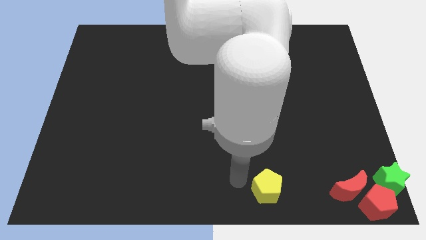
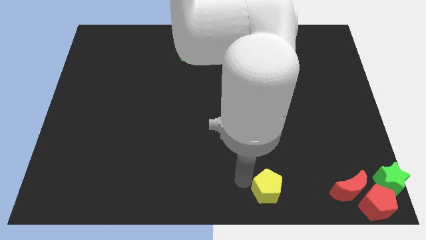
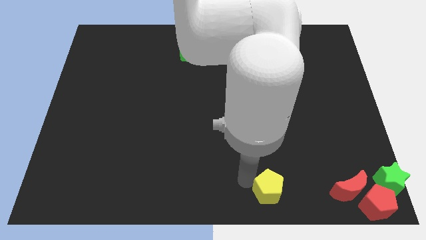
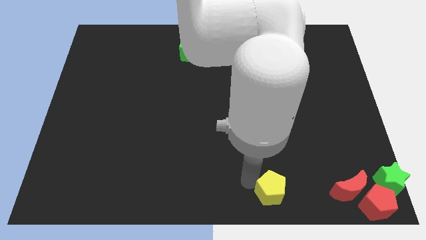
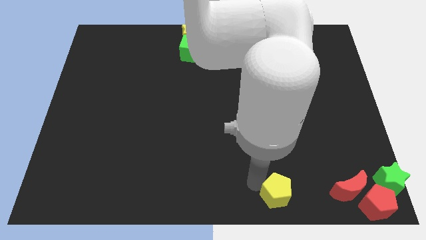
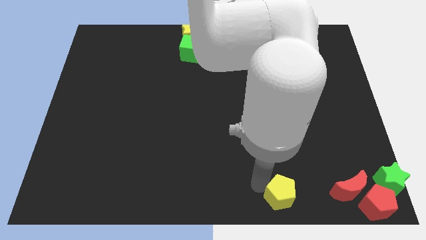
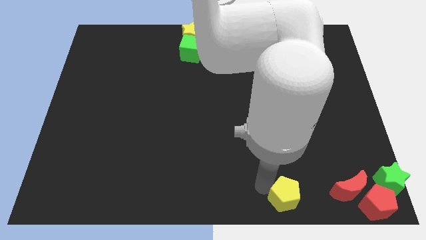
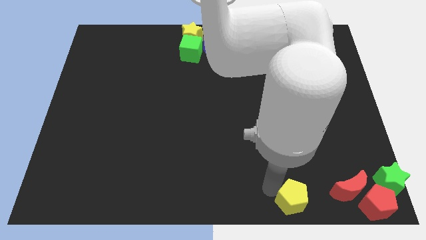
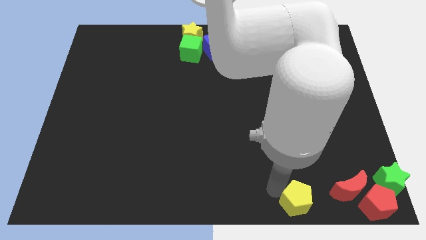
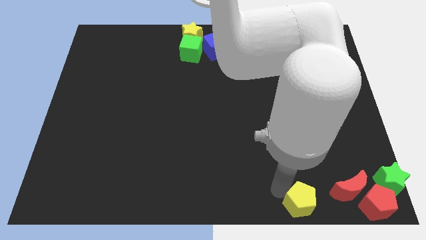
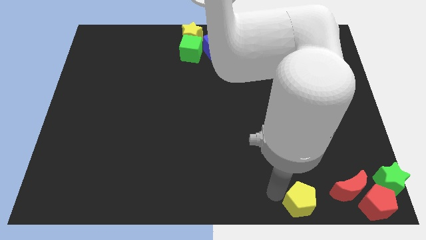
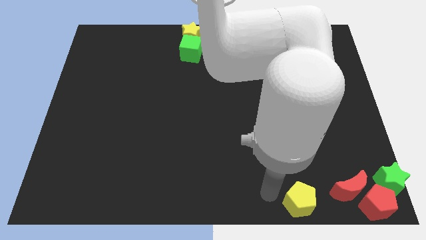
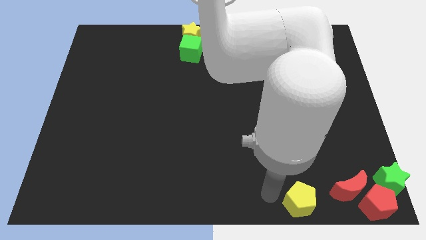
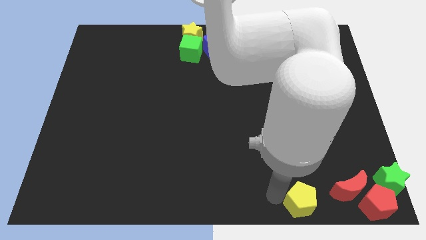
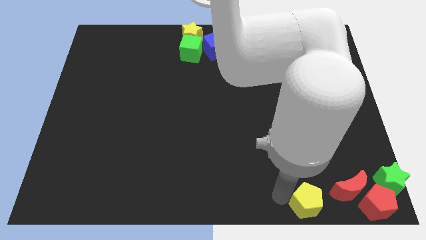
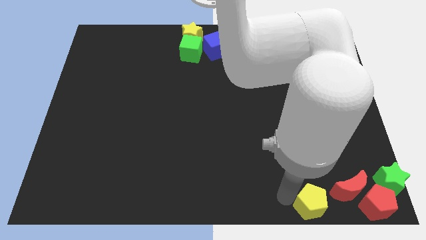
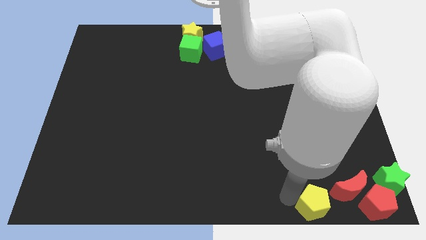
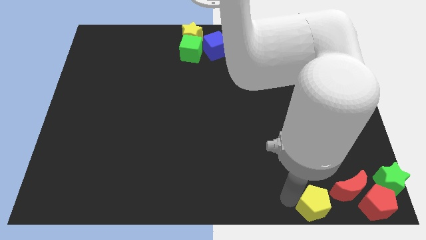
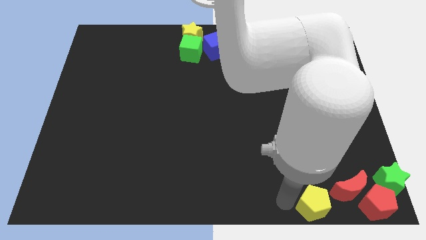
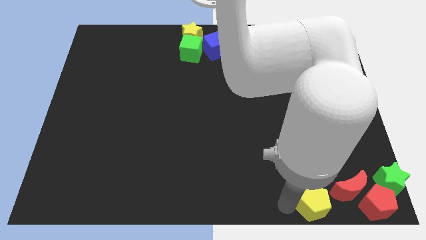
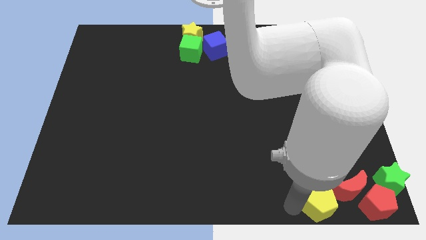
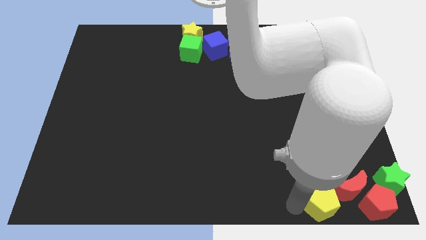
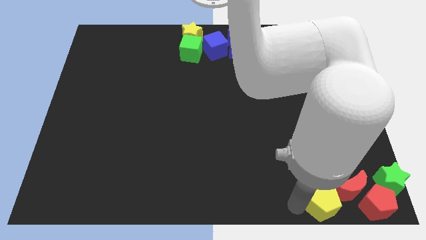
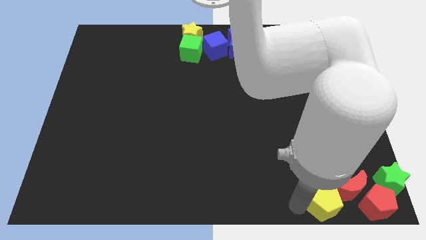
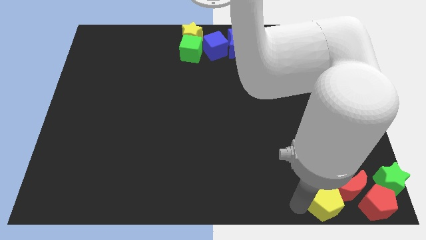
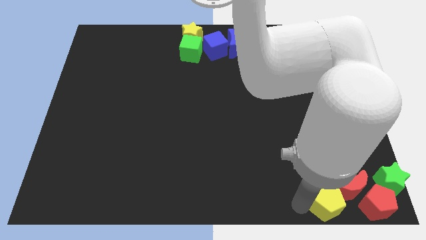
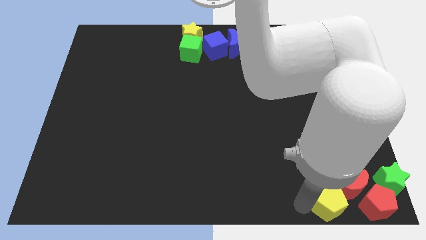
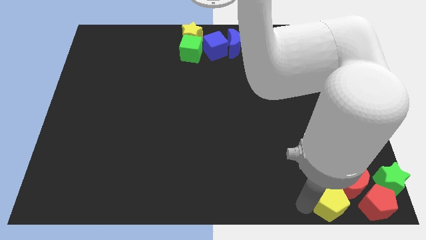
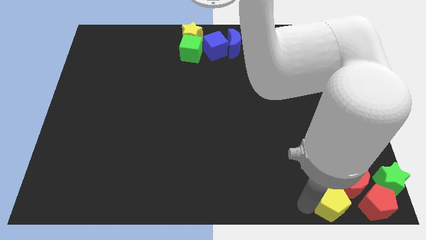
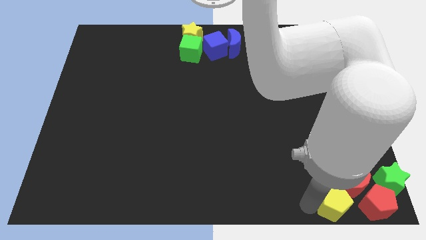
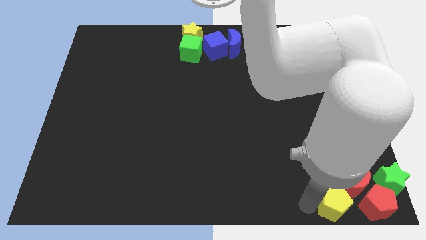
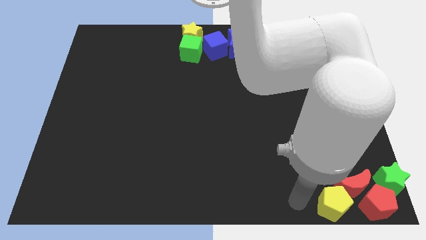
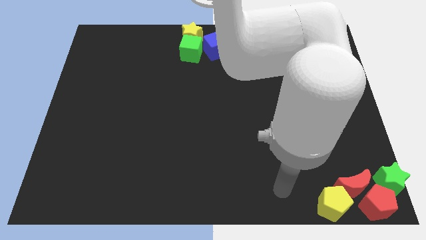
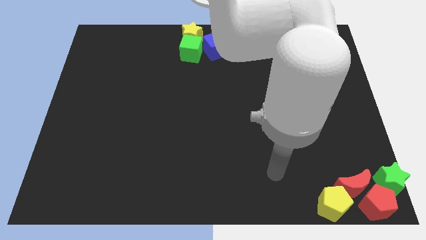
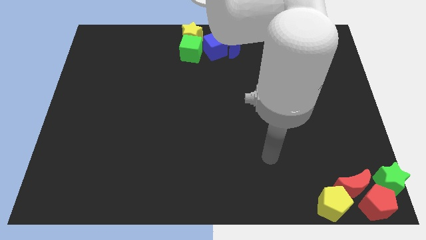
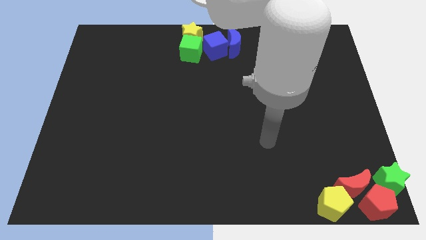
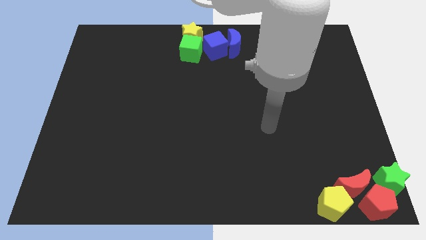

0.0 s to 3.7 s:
place the yellow pentagon left of the red pentagon

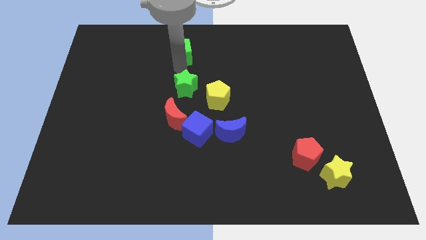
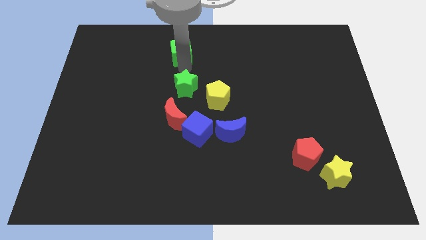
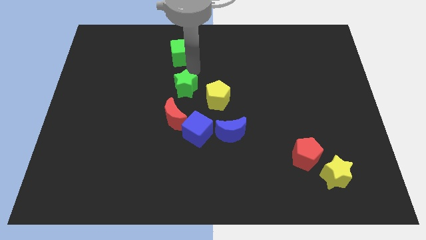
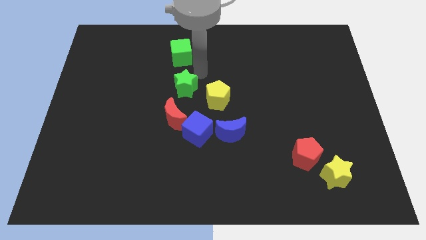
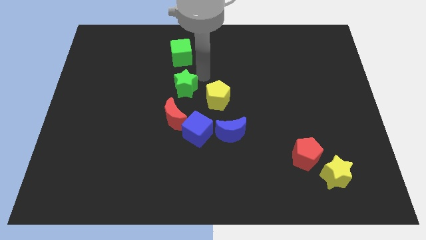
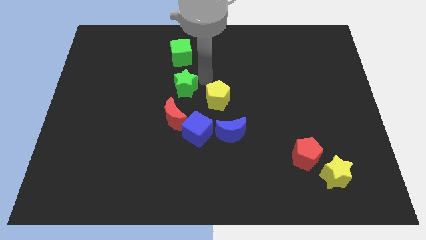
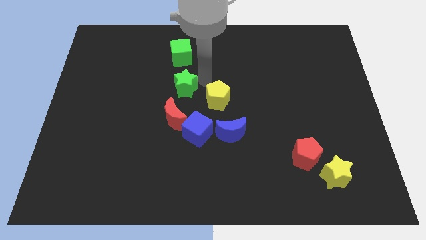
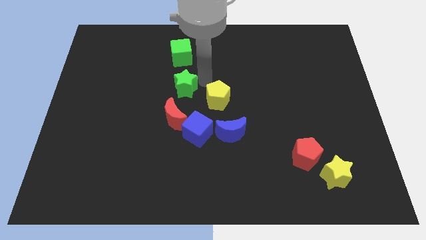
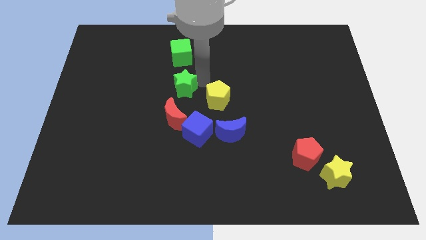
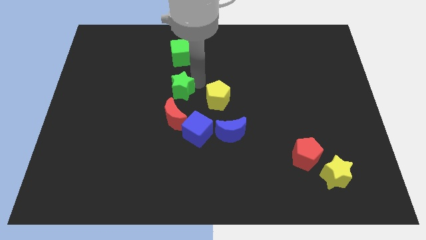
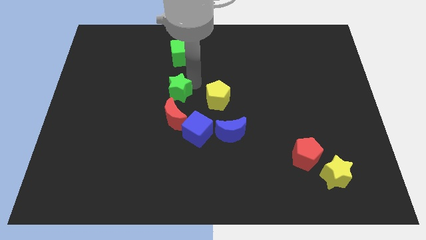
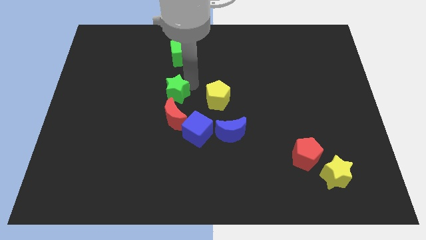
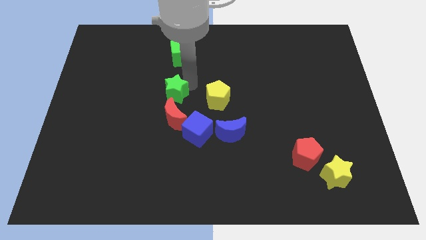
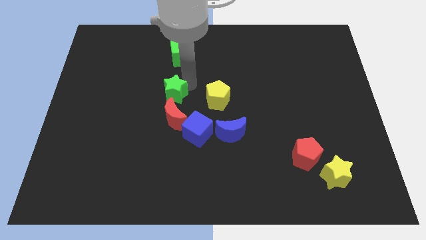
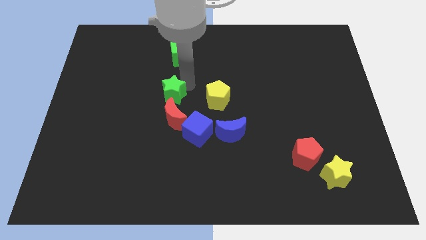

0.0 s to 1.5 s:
move the green star above the red crescent

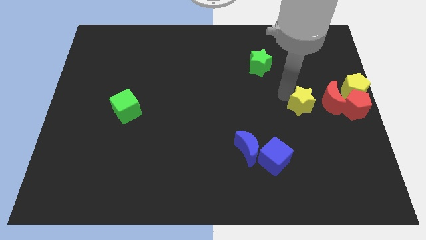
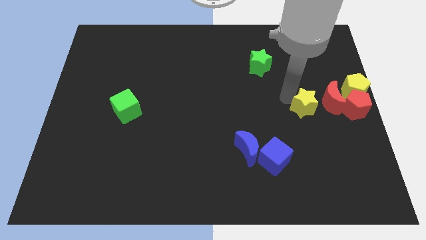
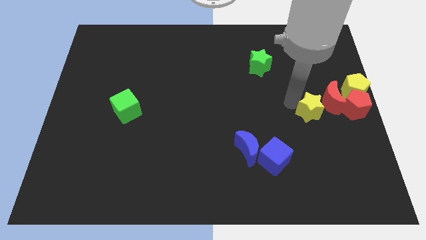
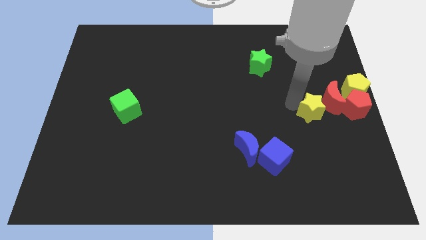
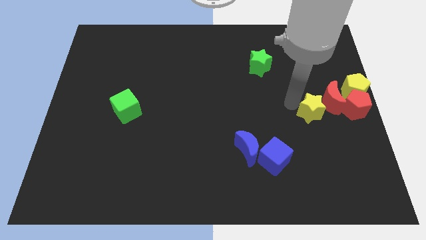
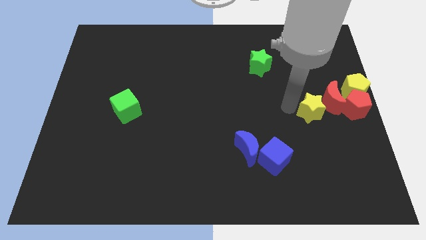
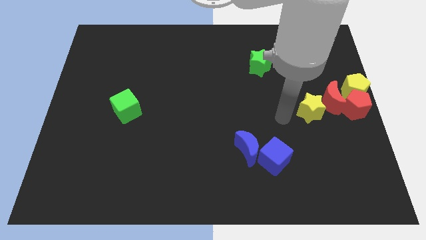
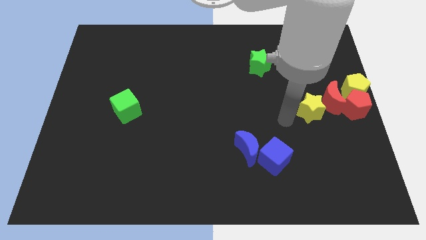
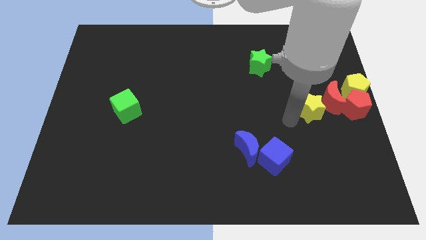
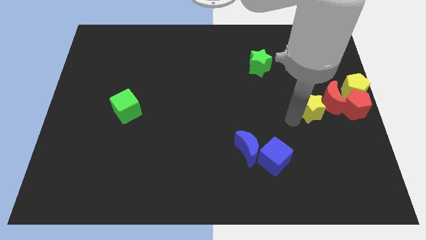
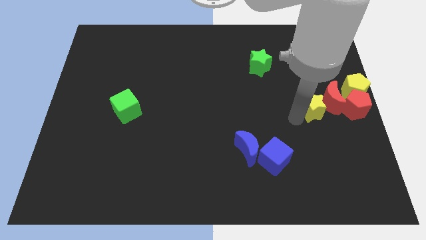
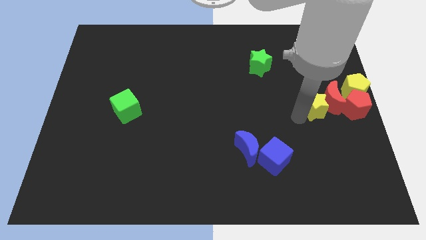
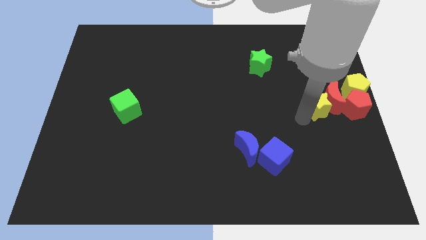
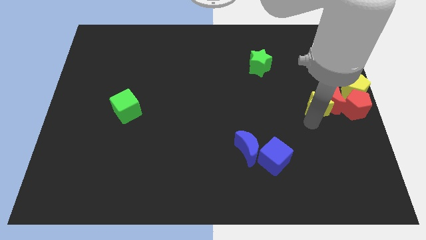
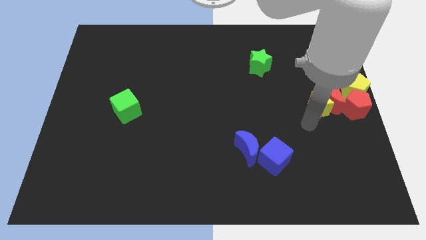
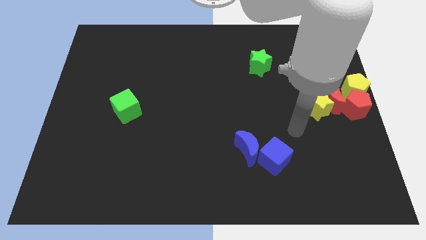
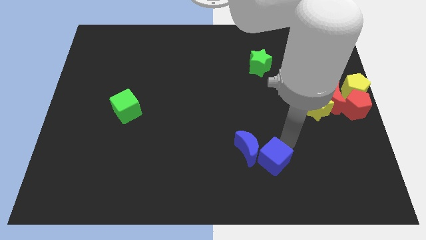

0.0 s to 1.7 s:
move the yellow star to the left of the red crescent

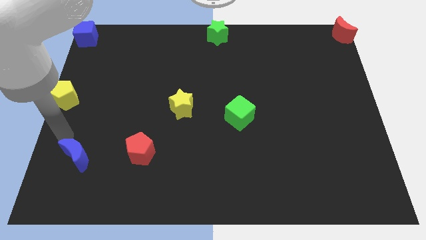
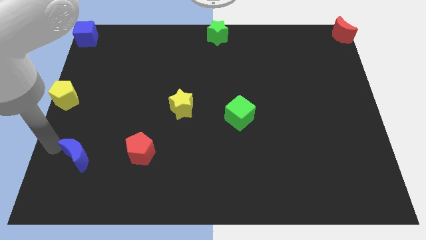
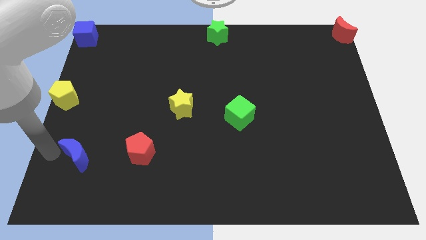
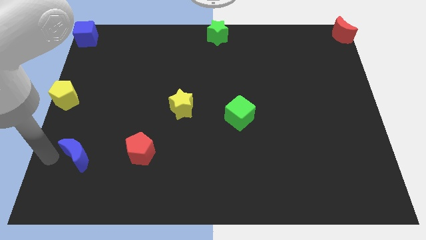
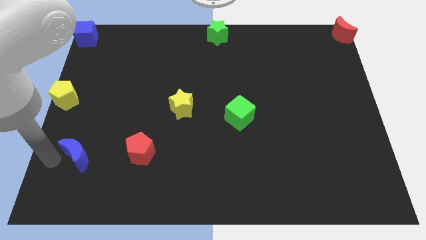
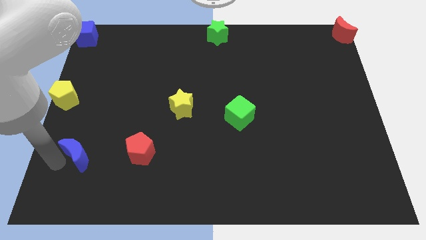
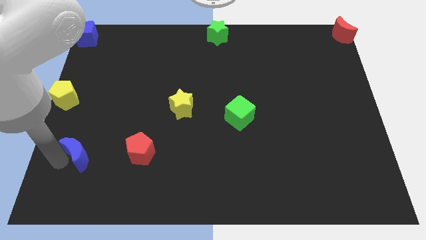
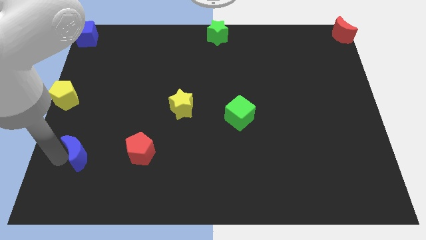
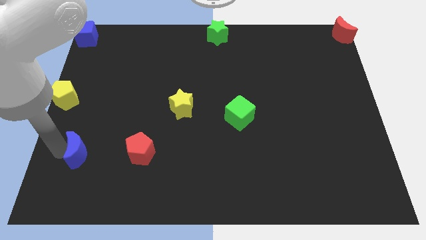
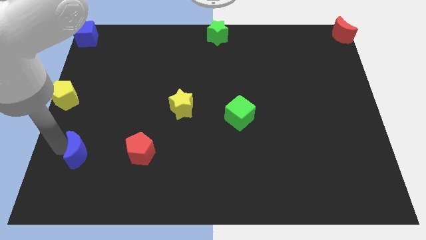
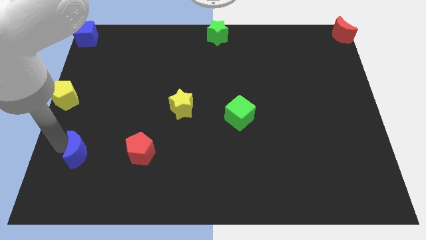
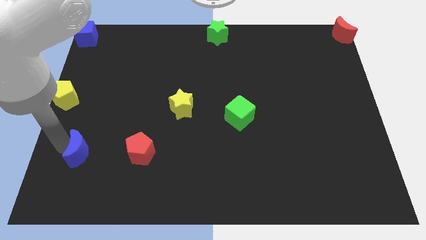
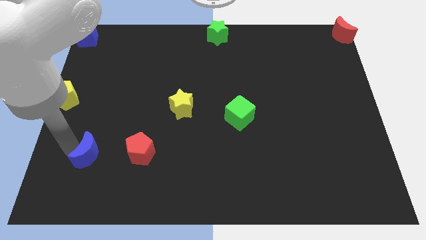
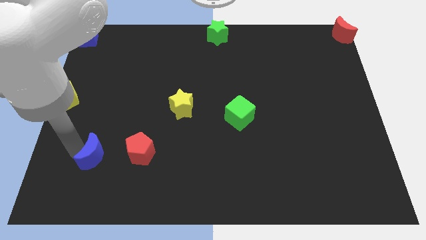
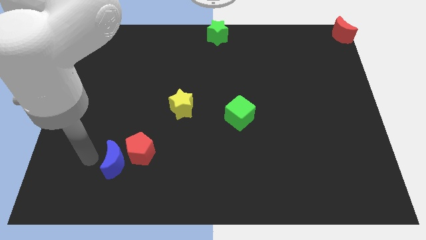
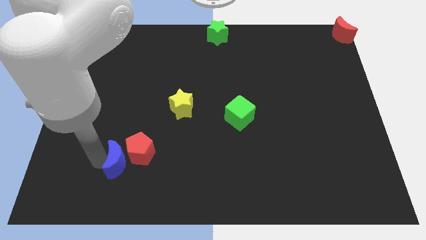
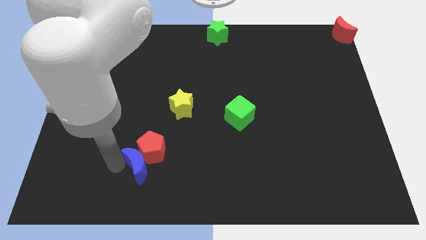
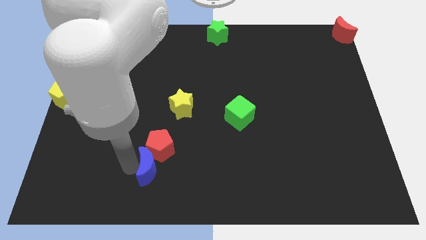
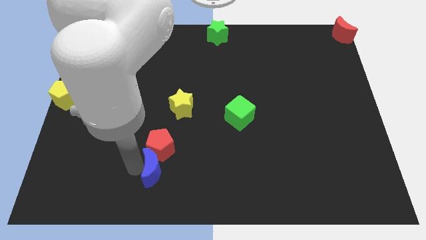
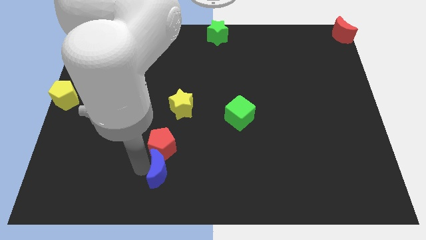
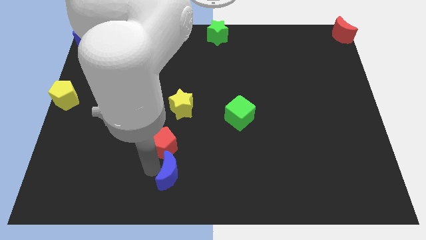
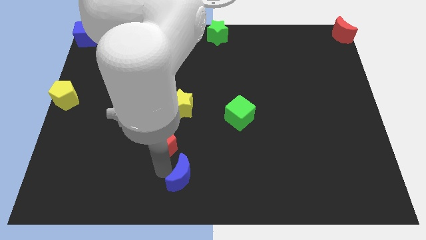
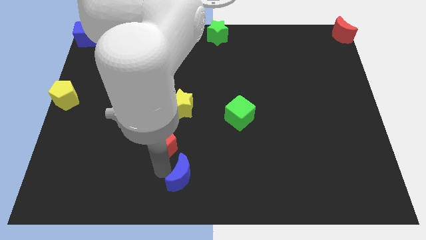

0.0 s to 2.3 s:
place the blue crescent to the bottom of the red pentagon
